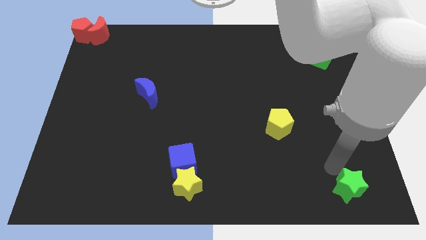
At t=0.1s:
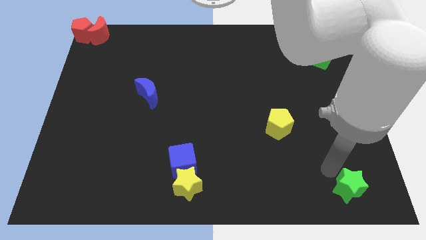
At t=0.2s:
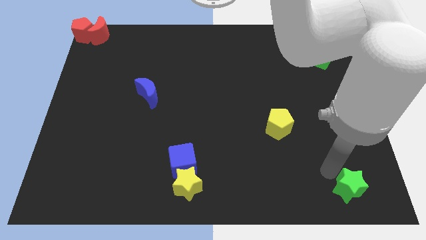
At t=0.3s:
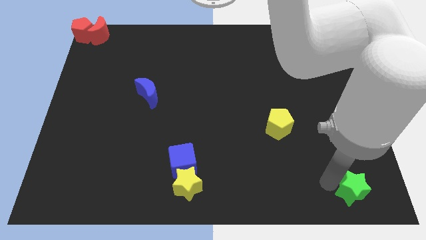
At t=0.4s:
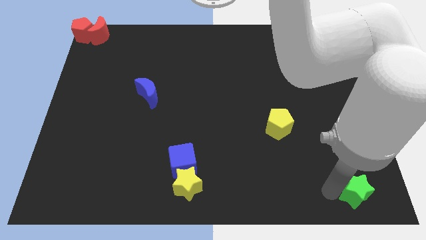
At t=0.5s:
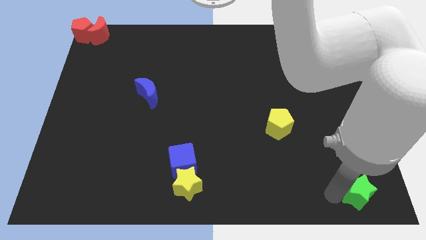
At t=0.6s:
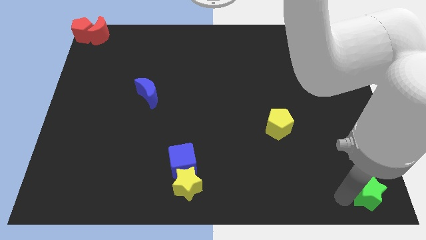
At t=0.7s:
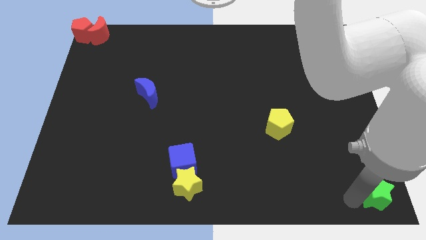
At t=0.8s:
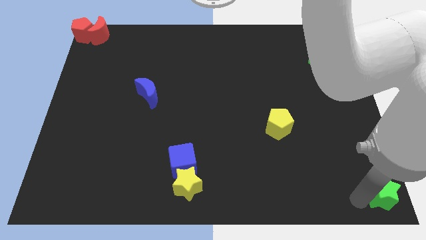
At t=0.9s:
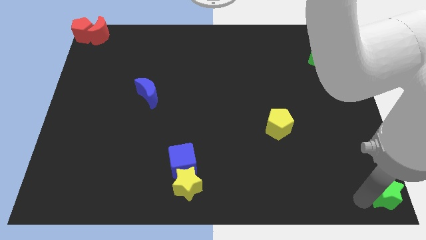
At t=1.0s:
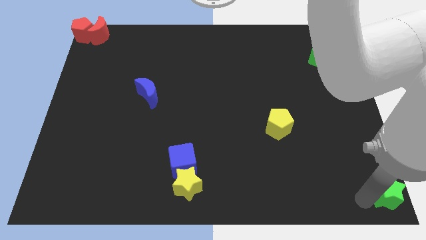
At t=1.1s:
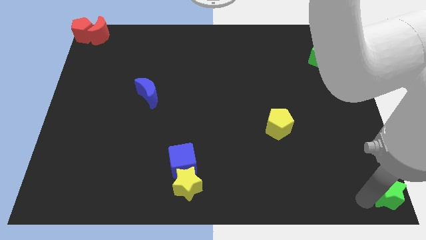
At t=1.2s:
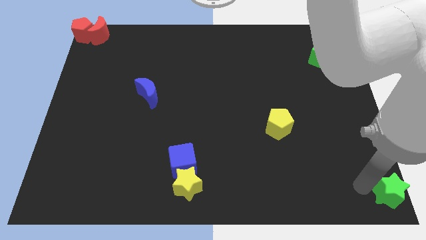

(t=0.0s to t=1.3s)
move the green star bottom right to the board

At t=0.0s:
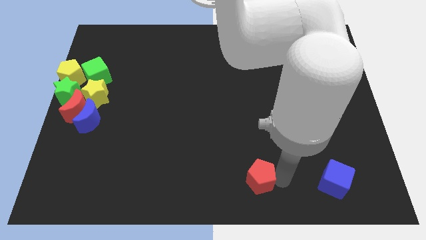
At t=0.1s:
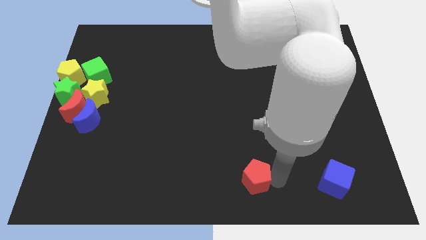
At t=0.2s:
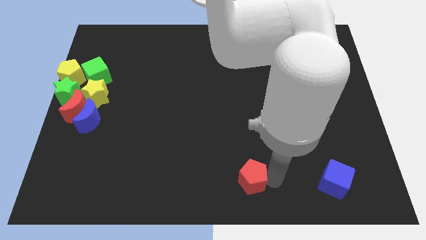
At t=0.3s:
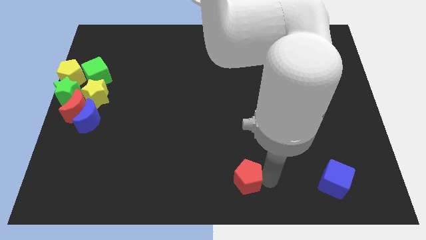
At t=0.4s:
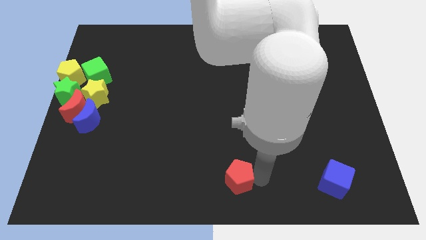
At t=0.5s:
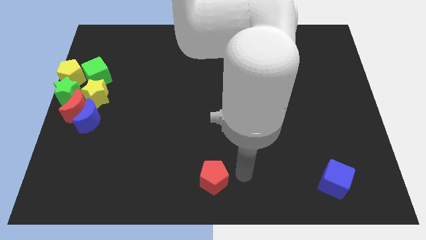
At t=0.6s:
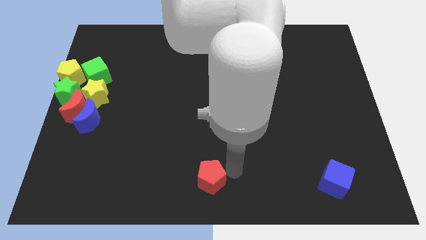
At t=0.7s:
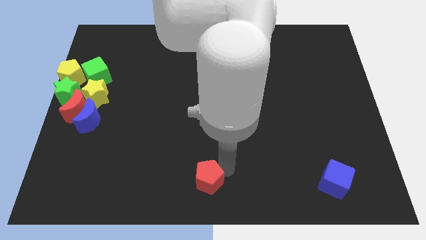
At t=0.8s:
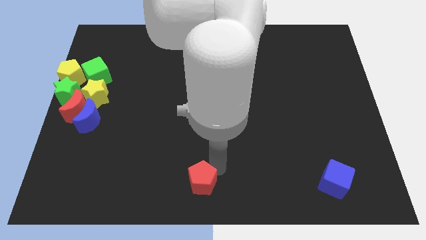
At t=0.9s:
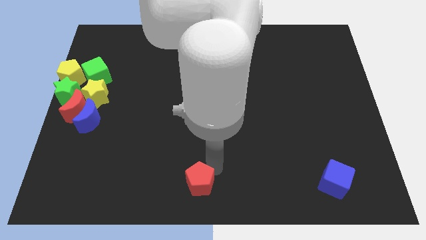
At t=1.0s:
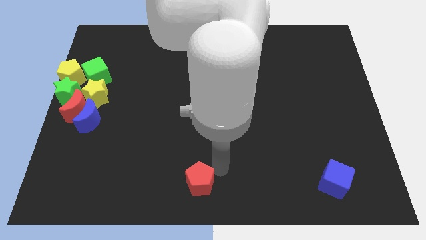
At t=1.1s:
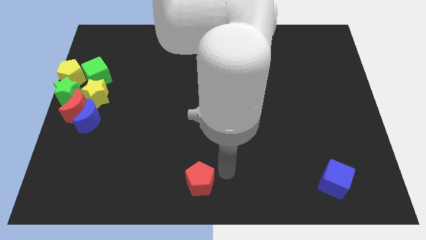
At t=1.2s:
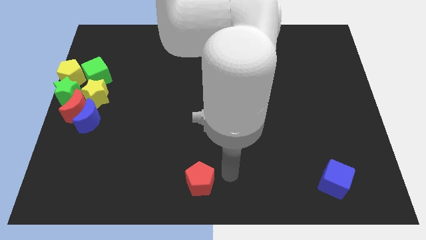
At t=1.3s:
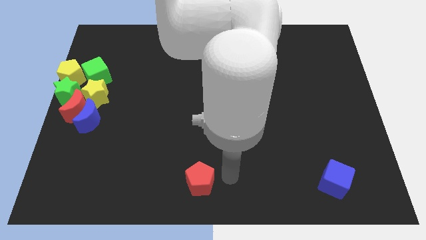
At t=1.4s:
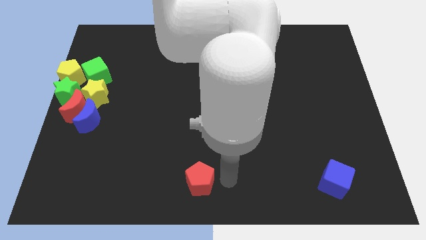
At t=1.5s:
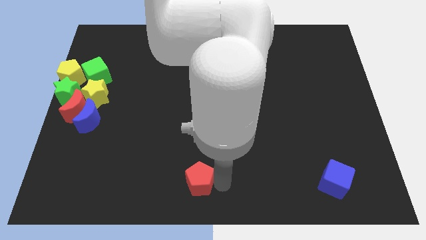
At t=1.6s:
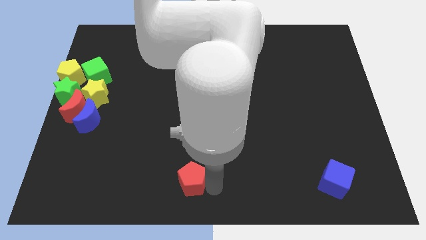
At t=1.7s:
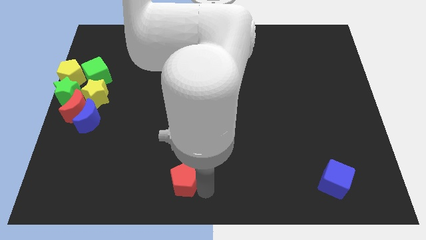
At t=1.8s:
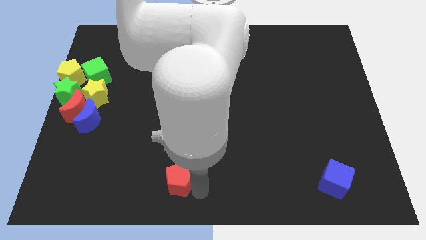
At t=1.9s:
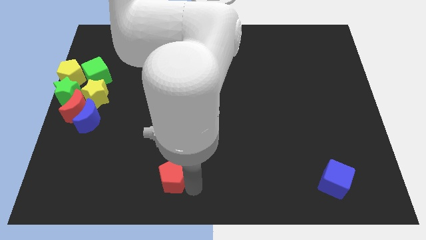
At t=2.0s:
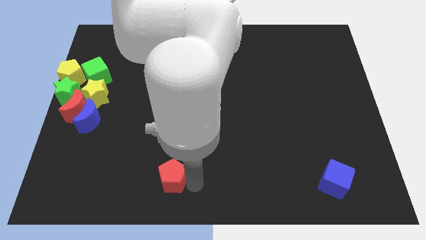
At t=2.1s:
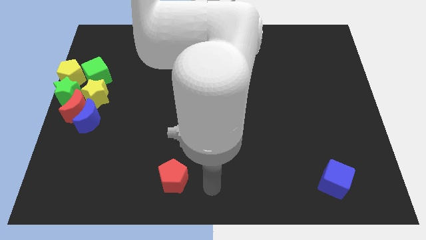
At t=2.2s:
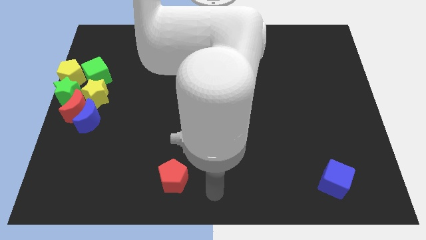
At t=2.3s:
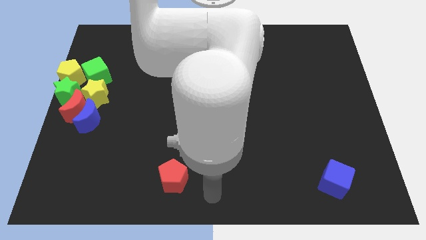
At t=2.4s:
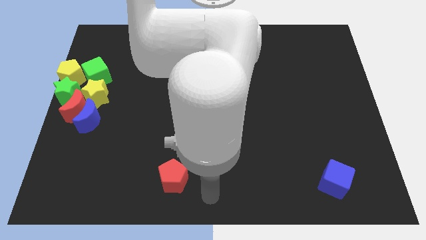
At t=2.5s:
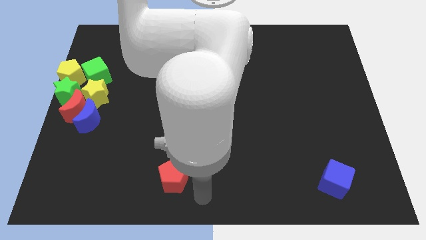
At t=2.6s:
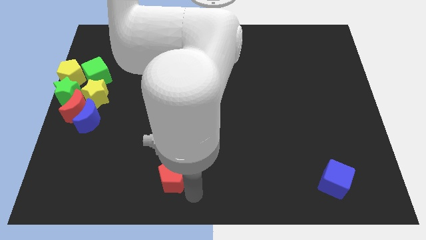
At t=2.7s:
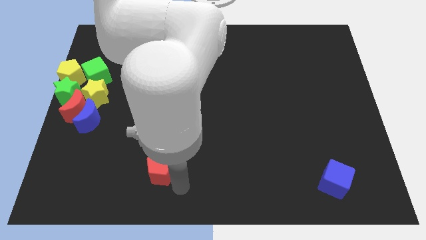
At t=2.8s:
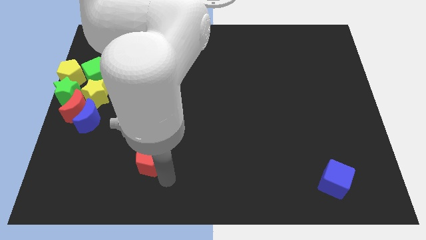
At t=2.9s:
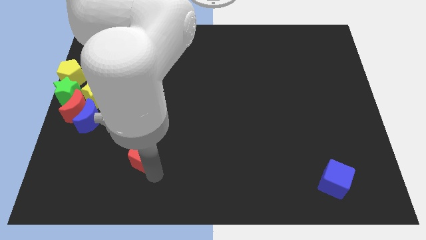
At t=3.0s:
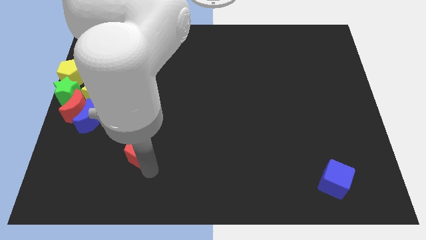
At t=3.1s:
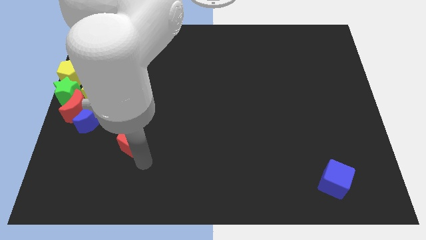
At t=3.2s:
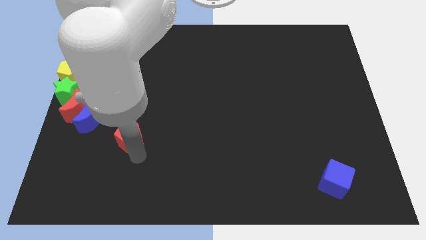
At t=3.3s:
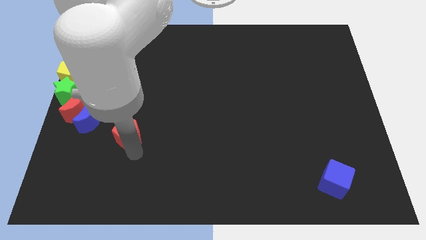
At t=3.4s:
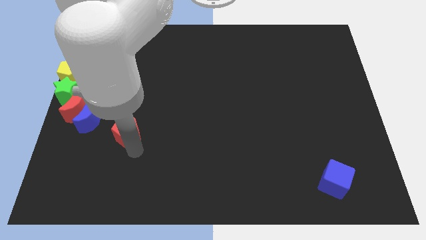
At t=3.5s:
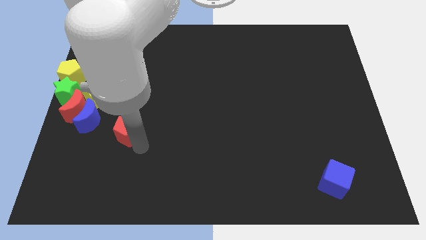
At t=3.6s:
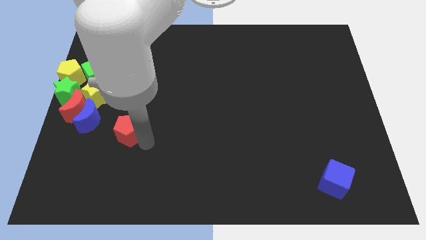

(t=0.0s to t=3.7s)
move red pentagon towards blue crescent

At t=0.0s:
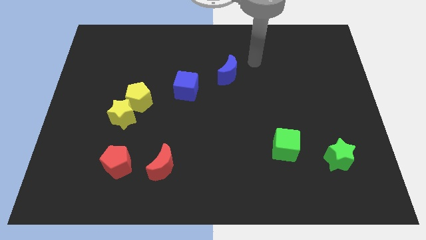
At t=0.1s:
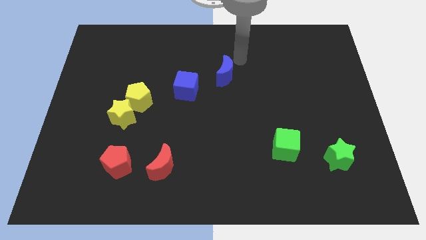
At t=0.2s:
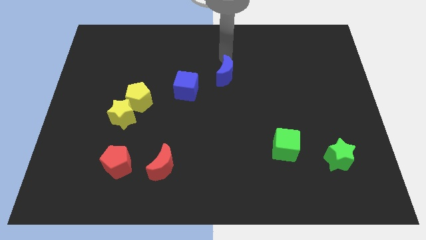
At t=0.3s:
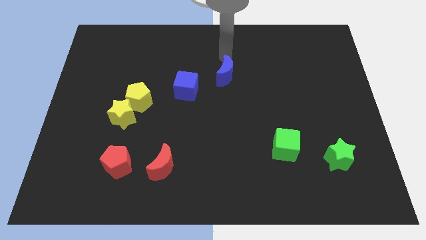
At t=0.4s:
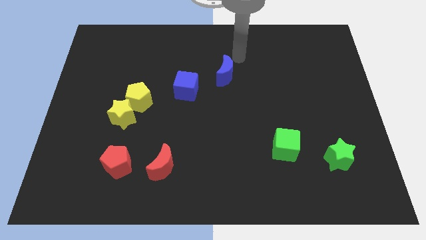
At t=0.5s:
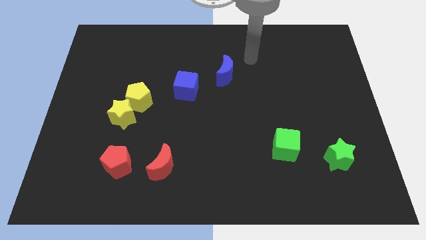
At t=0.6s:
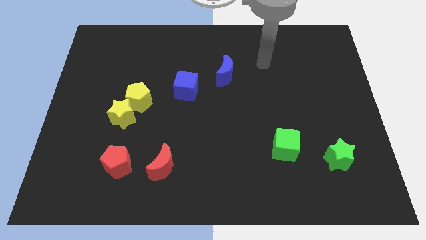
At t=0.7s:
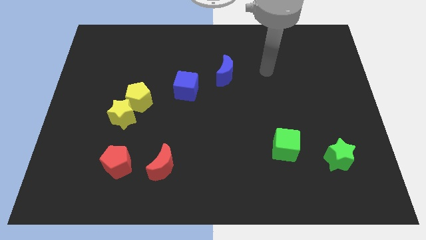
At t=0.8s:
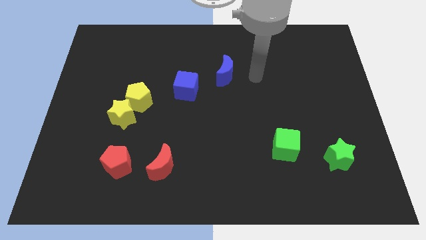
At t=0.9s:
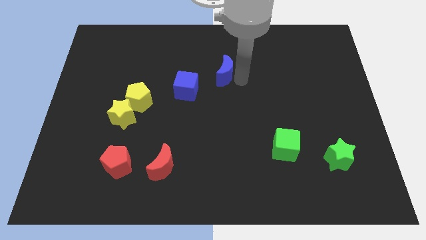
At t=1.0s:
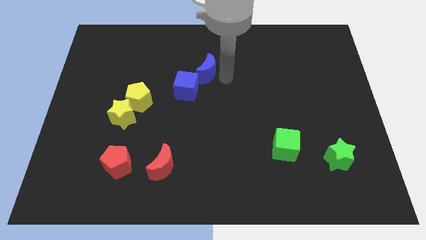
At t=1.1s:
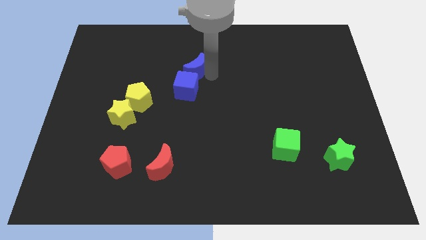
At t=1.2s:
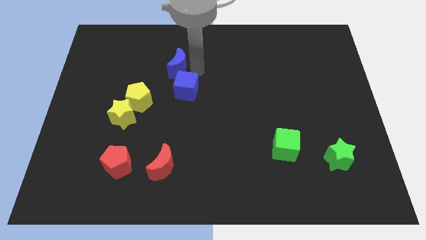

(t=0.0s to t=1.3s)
move the blue moon left above the blue cube

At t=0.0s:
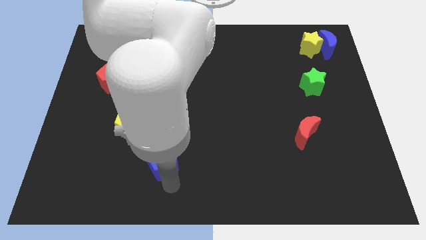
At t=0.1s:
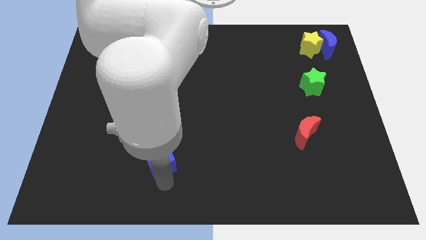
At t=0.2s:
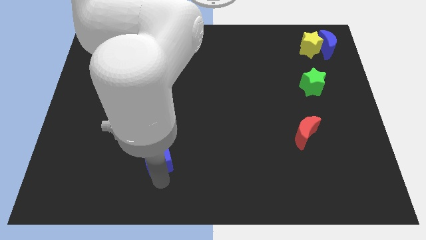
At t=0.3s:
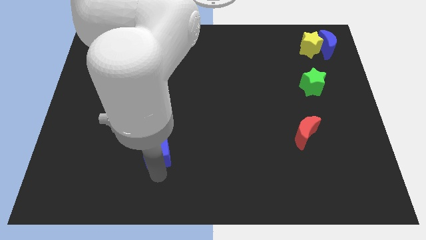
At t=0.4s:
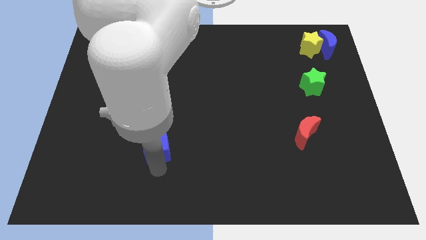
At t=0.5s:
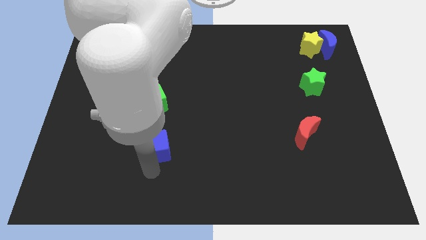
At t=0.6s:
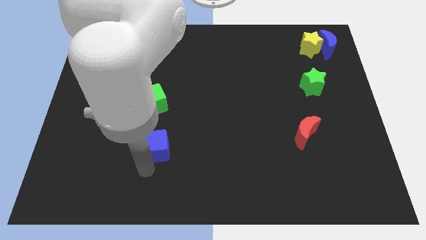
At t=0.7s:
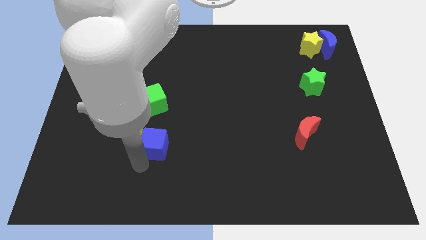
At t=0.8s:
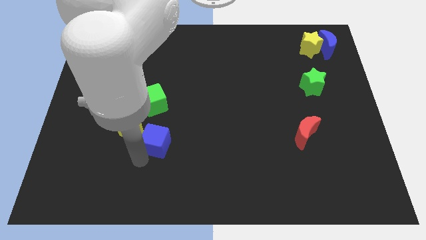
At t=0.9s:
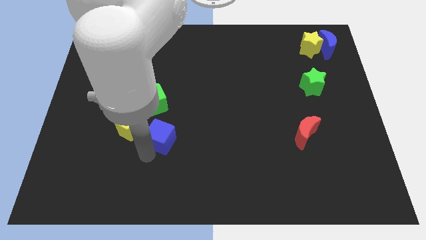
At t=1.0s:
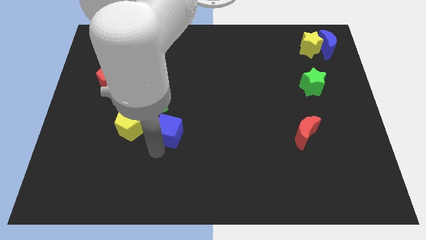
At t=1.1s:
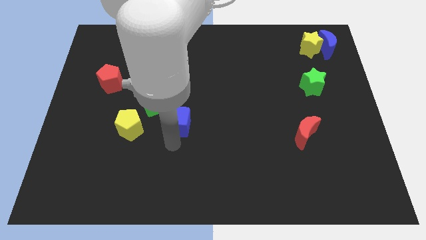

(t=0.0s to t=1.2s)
push blue cube below green cube

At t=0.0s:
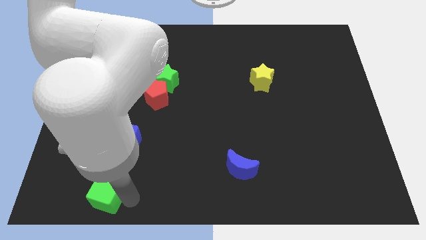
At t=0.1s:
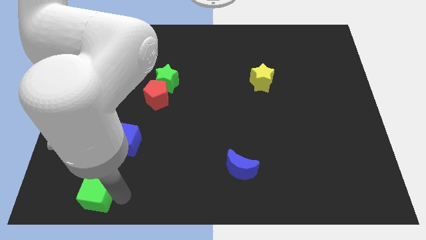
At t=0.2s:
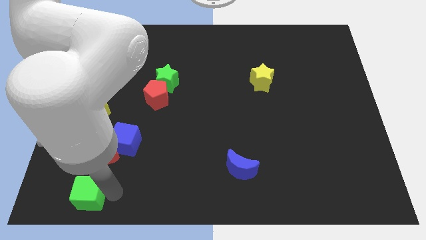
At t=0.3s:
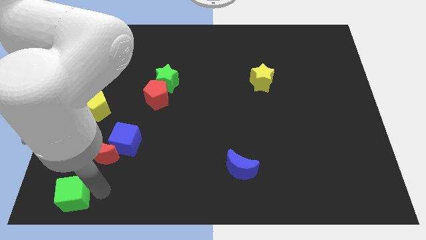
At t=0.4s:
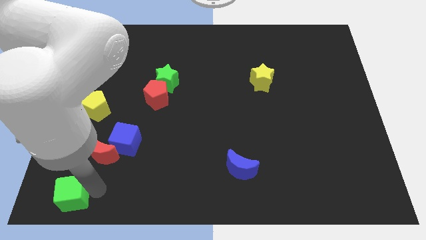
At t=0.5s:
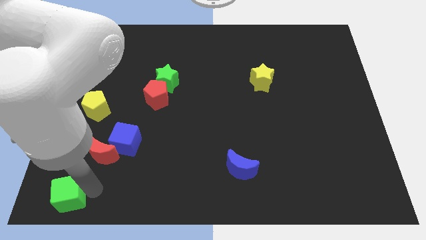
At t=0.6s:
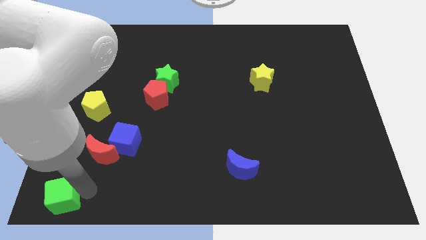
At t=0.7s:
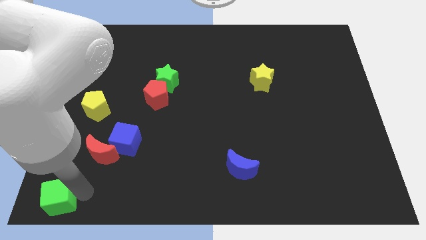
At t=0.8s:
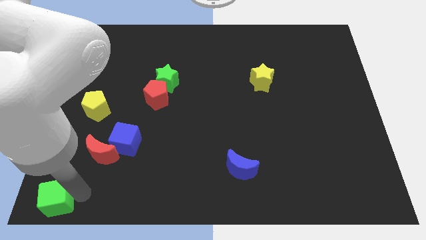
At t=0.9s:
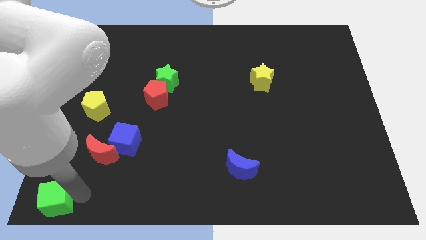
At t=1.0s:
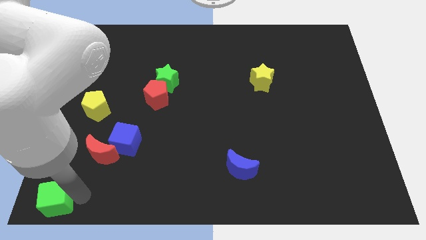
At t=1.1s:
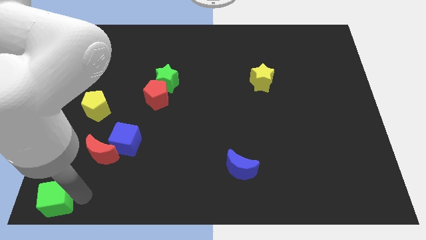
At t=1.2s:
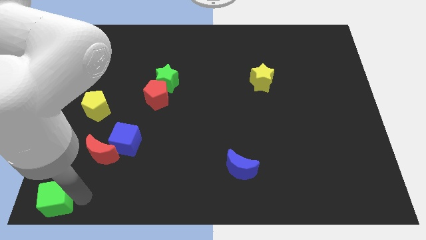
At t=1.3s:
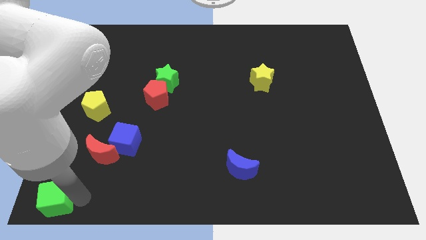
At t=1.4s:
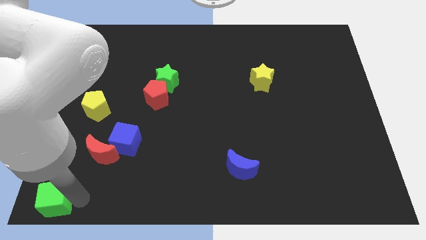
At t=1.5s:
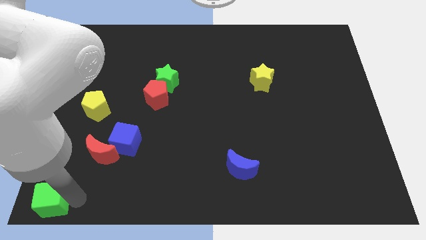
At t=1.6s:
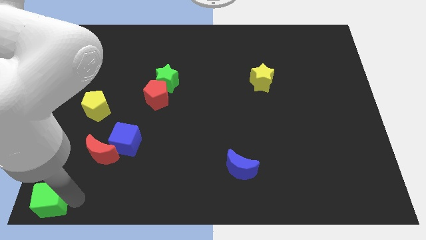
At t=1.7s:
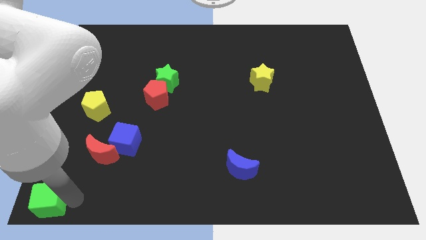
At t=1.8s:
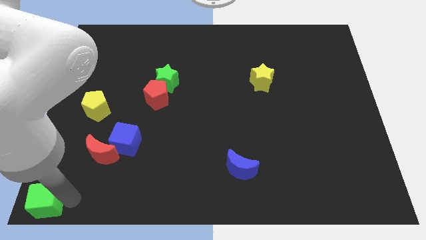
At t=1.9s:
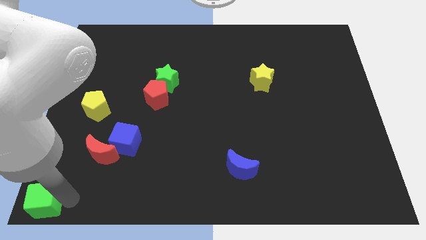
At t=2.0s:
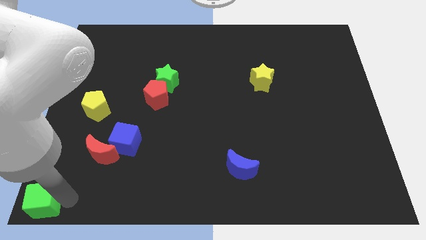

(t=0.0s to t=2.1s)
push the green cube towards left bottom of the board
